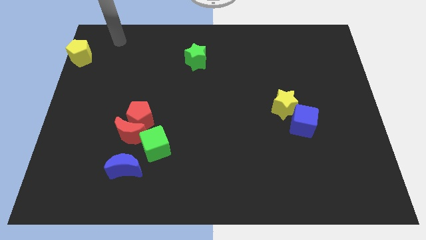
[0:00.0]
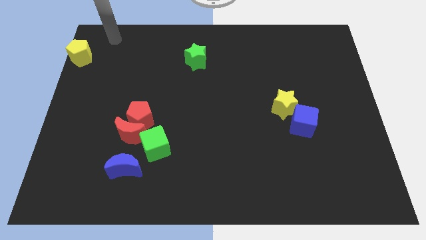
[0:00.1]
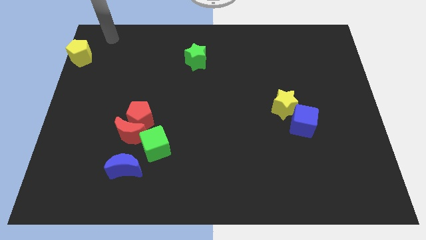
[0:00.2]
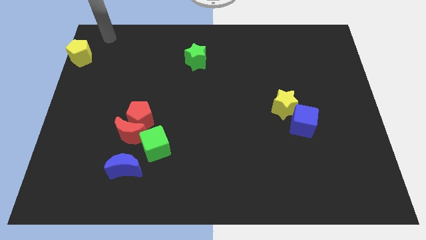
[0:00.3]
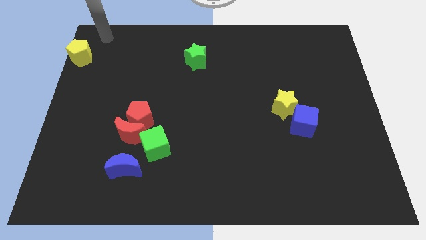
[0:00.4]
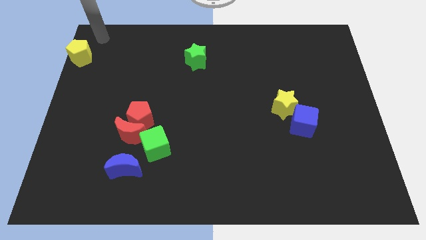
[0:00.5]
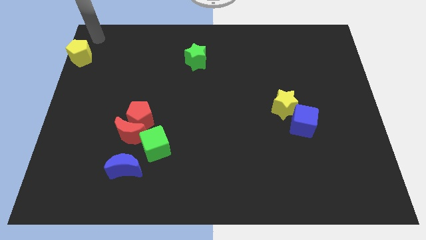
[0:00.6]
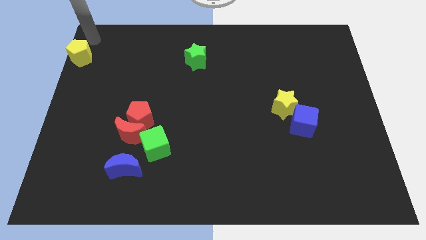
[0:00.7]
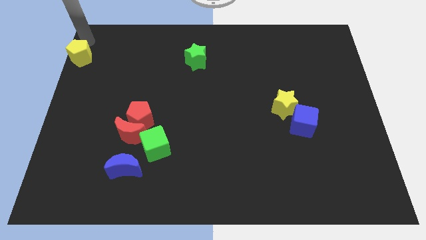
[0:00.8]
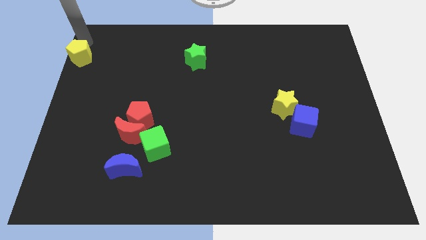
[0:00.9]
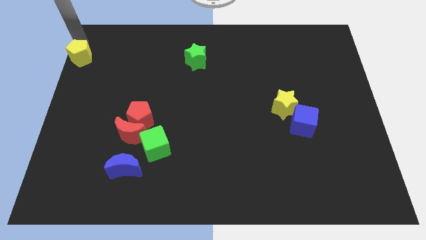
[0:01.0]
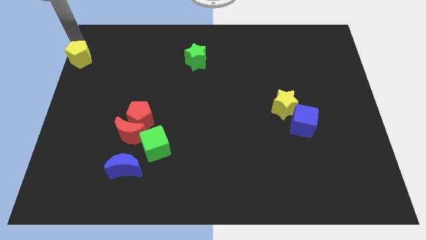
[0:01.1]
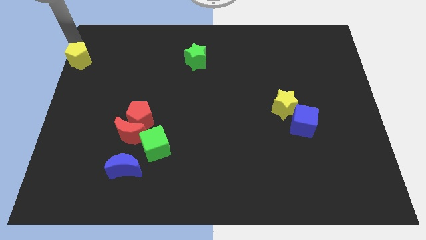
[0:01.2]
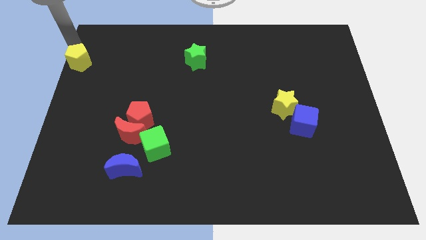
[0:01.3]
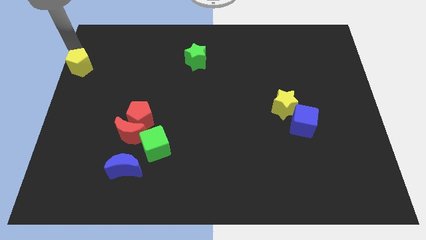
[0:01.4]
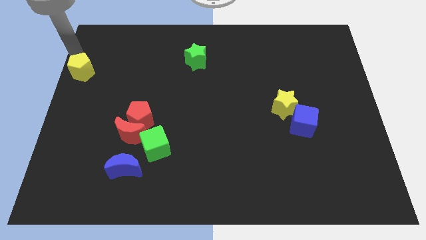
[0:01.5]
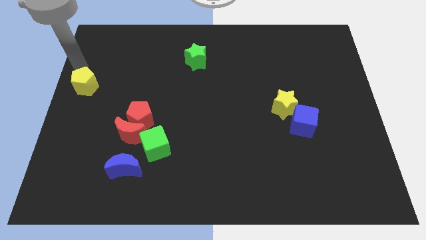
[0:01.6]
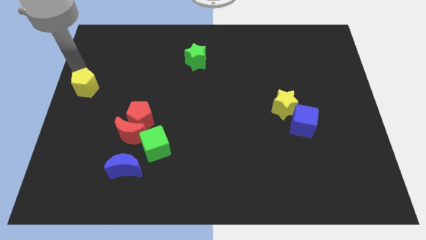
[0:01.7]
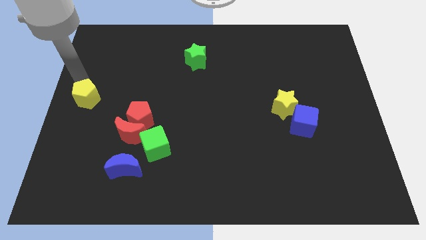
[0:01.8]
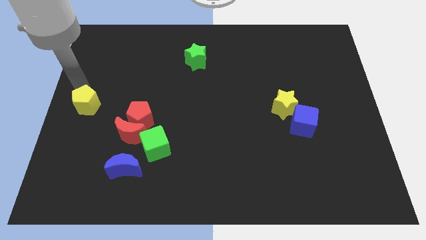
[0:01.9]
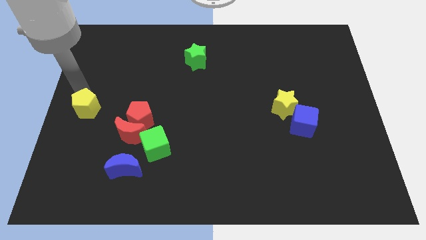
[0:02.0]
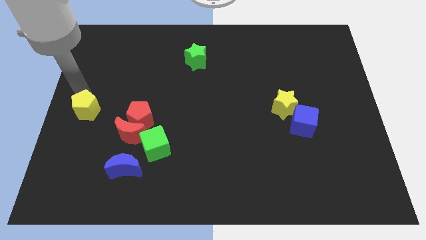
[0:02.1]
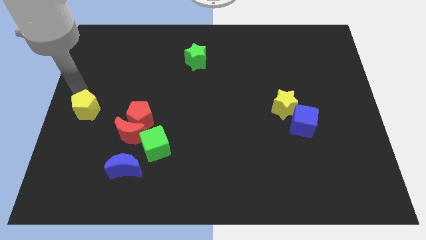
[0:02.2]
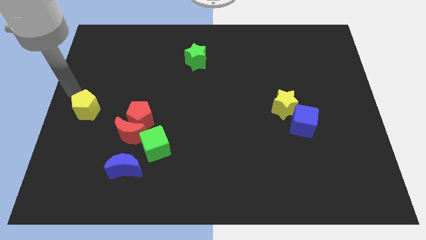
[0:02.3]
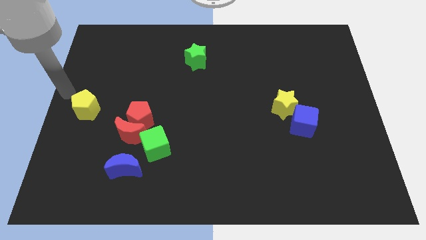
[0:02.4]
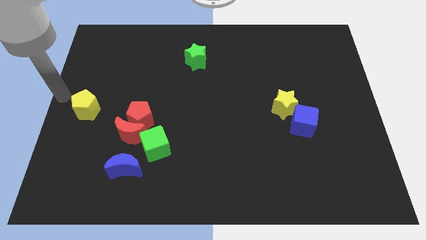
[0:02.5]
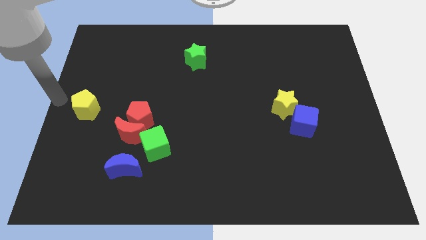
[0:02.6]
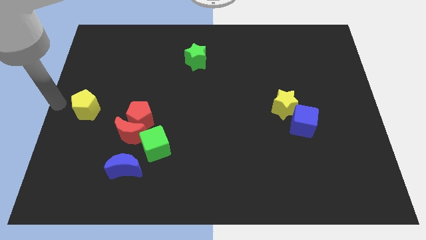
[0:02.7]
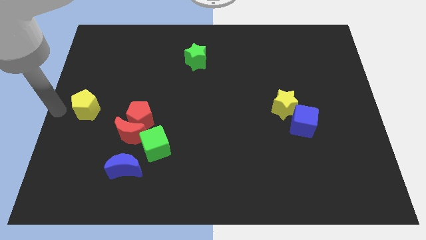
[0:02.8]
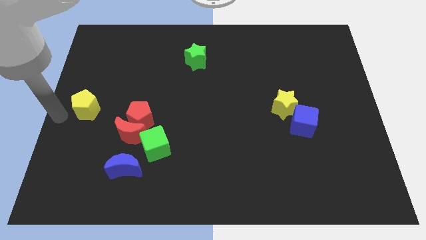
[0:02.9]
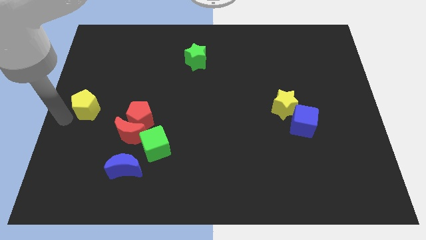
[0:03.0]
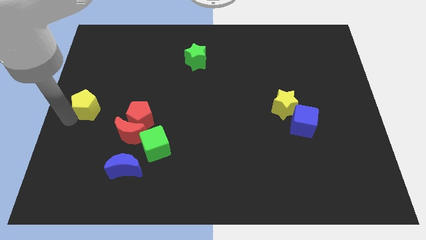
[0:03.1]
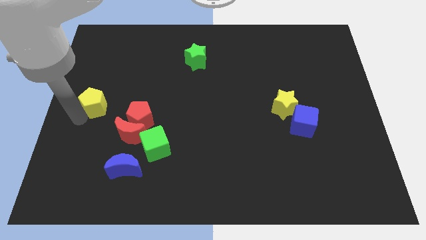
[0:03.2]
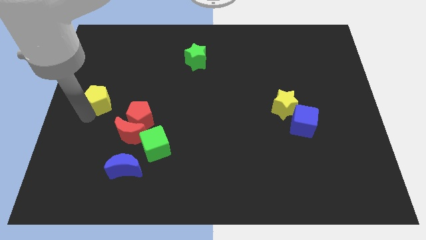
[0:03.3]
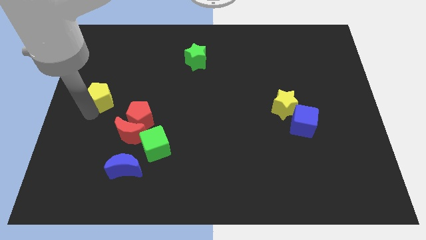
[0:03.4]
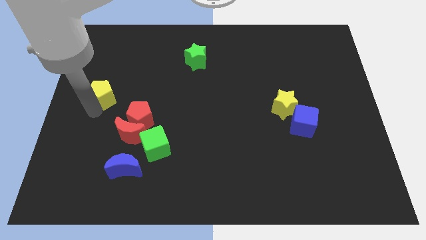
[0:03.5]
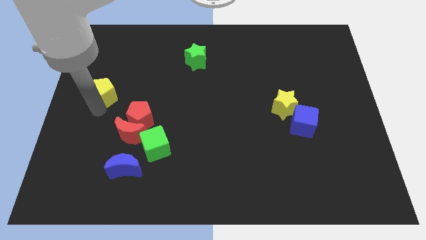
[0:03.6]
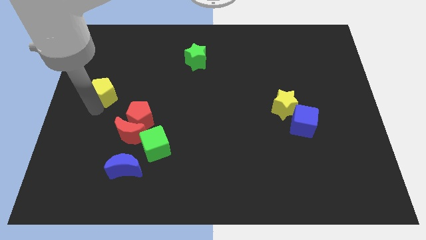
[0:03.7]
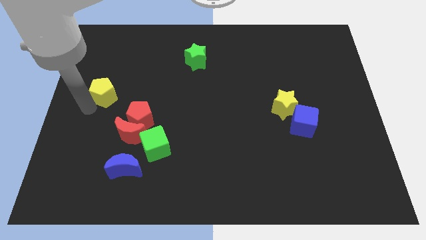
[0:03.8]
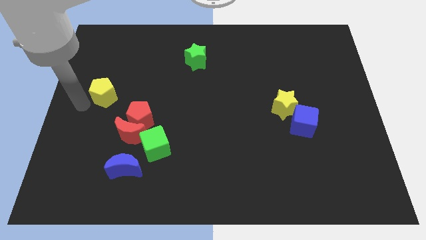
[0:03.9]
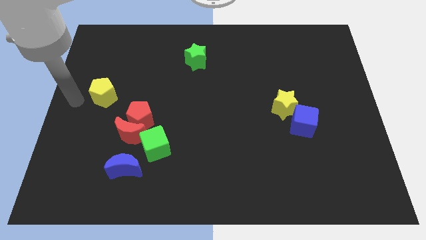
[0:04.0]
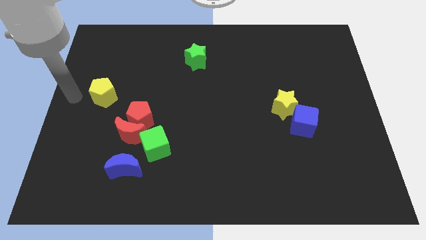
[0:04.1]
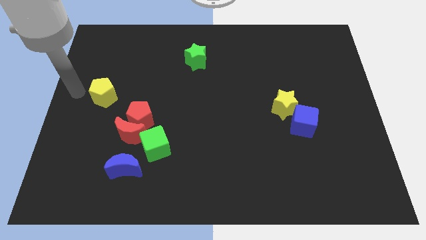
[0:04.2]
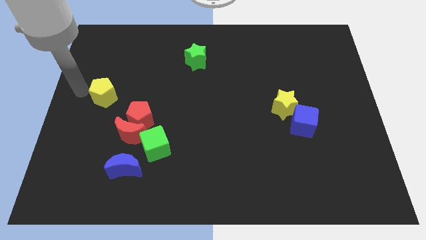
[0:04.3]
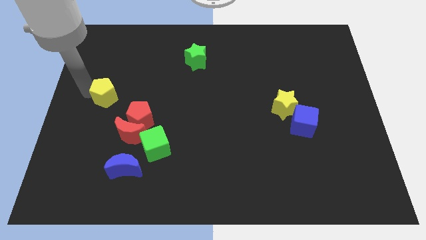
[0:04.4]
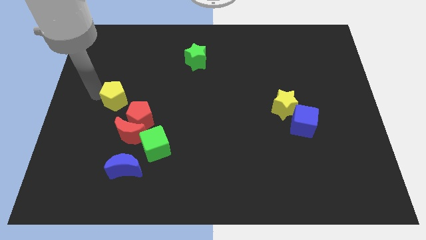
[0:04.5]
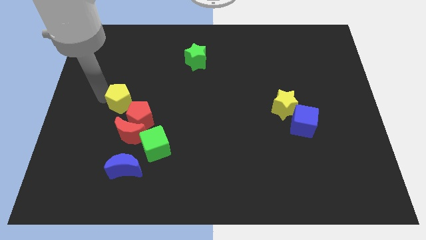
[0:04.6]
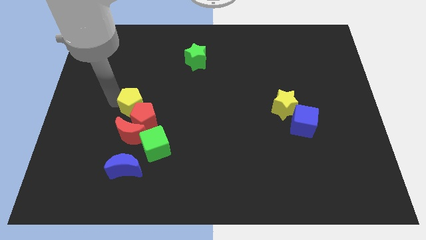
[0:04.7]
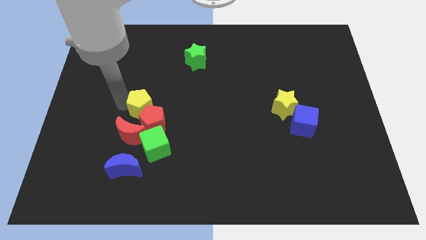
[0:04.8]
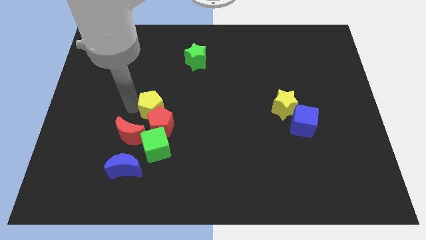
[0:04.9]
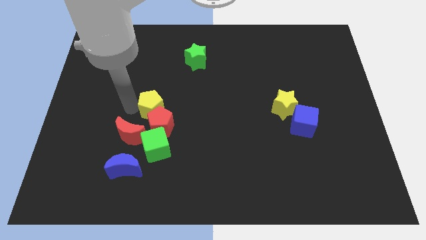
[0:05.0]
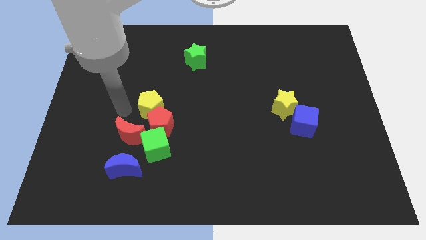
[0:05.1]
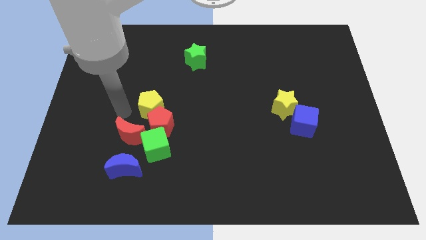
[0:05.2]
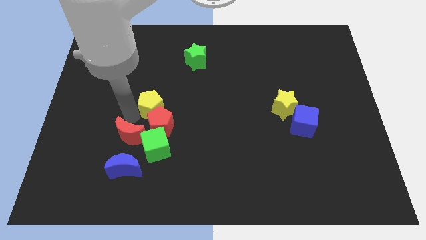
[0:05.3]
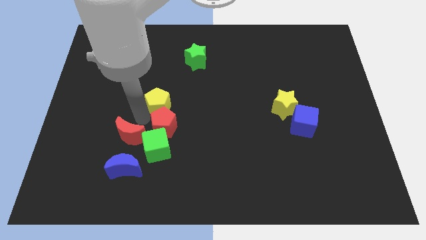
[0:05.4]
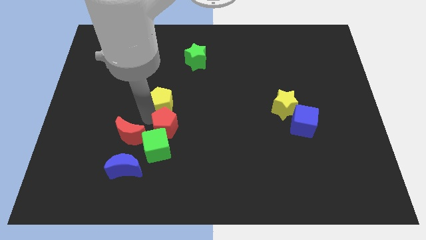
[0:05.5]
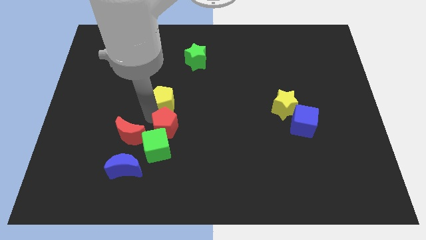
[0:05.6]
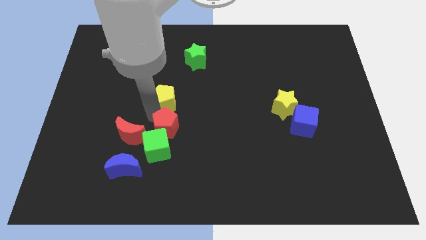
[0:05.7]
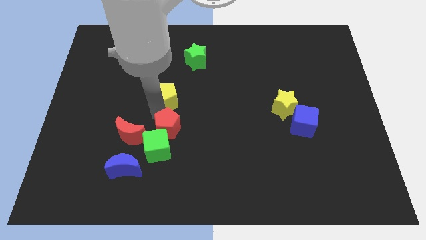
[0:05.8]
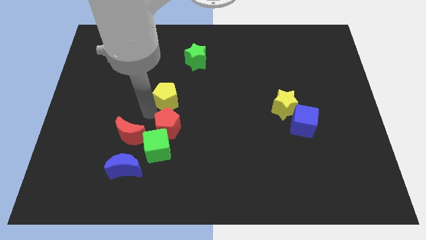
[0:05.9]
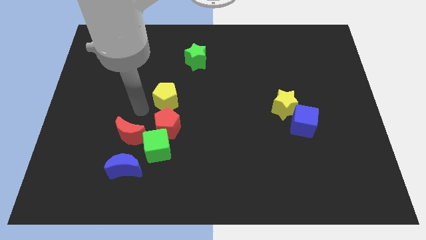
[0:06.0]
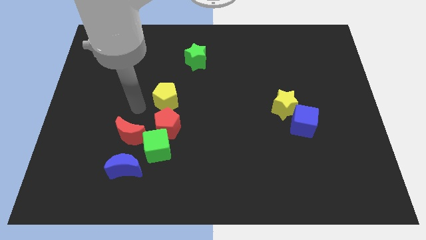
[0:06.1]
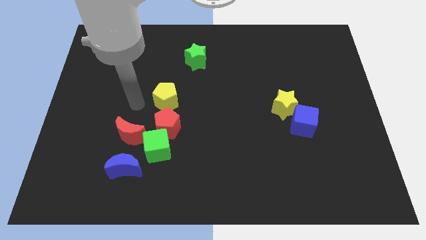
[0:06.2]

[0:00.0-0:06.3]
push the yellow pentagon into the red pentagon

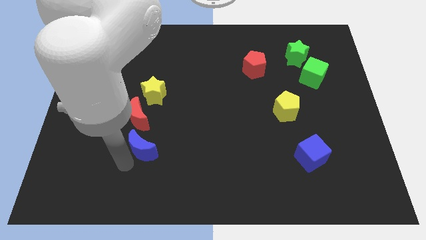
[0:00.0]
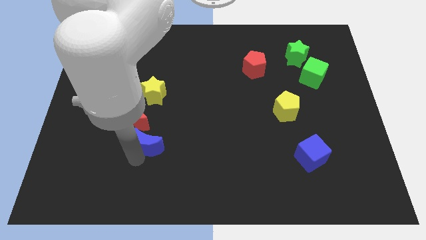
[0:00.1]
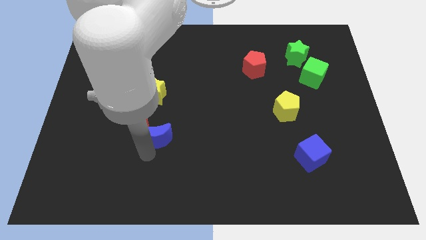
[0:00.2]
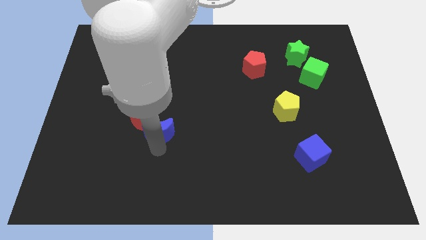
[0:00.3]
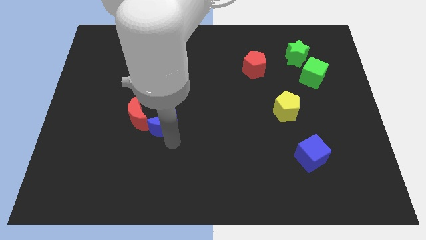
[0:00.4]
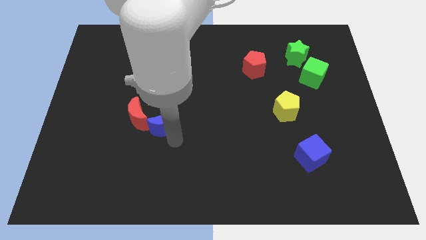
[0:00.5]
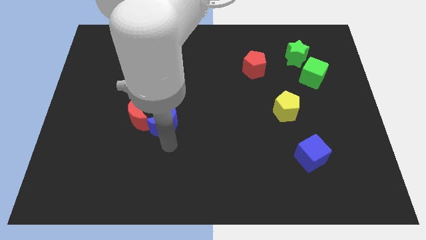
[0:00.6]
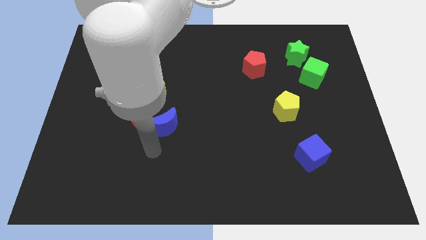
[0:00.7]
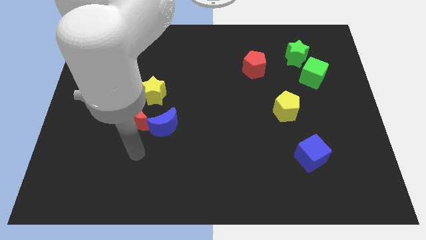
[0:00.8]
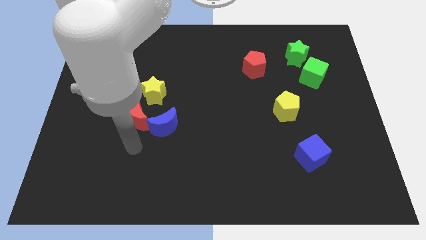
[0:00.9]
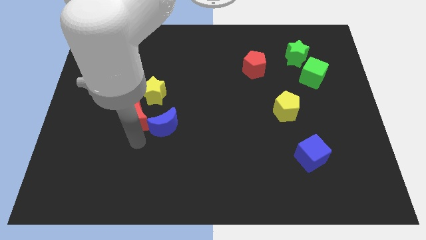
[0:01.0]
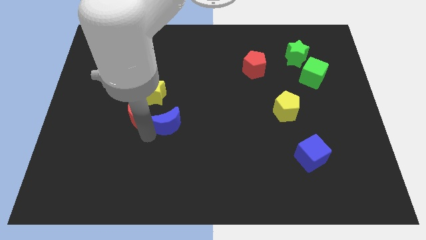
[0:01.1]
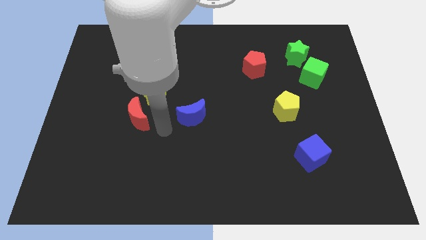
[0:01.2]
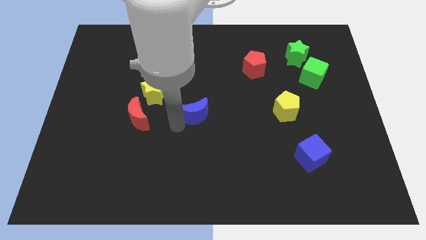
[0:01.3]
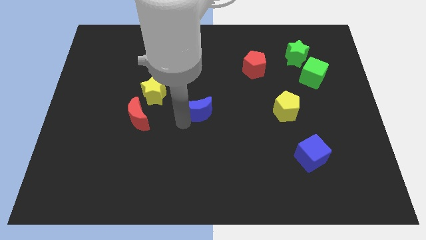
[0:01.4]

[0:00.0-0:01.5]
push blue moon towards middle of the board

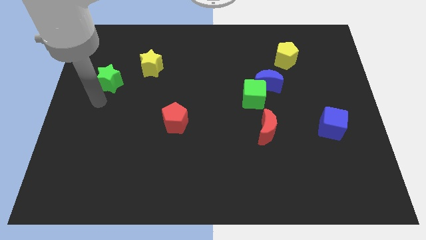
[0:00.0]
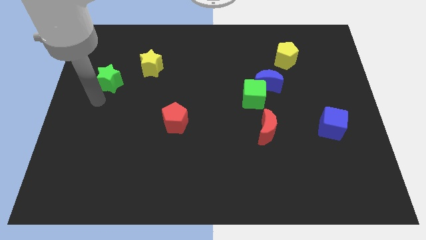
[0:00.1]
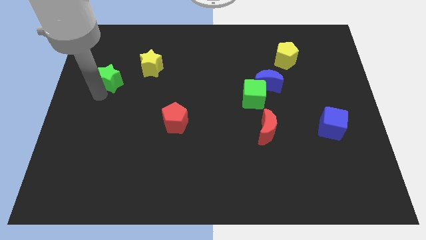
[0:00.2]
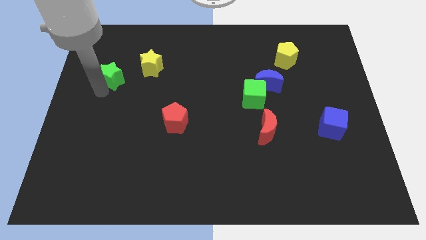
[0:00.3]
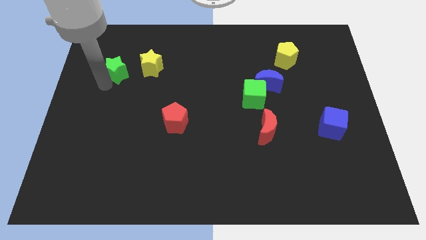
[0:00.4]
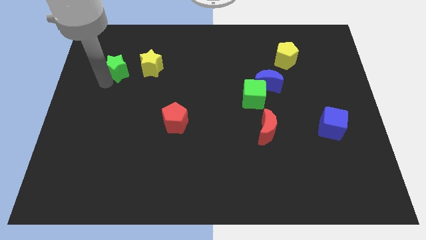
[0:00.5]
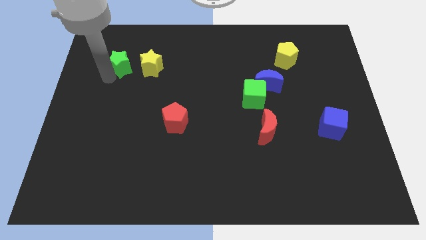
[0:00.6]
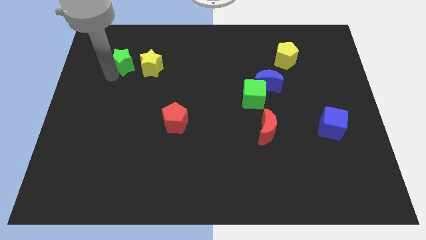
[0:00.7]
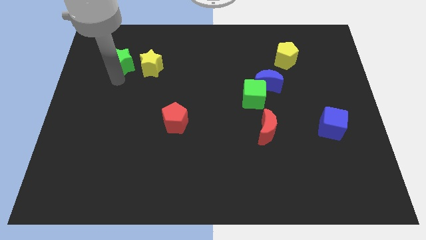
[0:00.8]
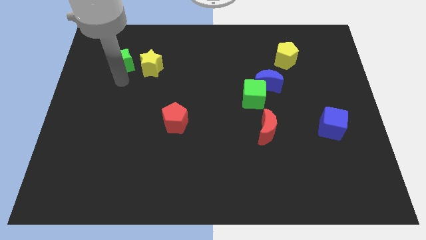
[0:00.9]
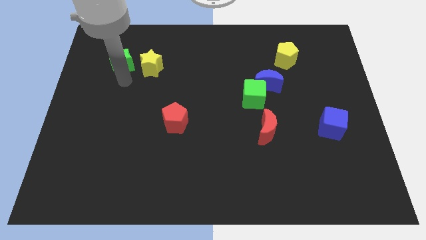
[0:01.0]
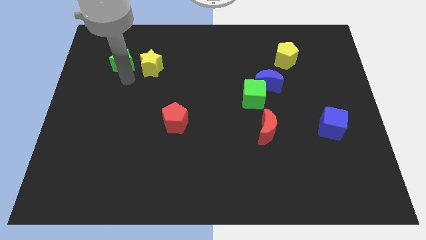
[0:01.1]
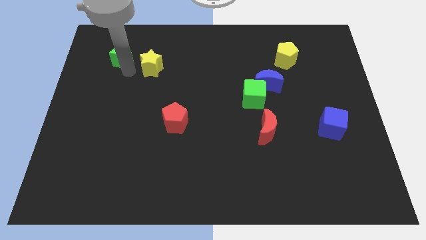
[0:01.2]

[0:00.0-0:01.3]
push the green star left to the yellow star
